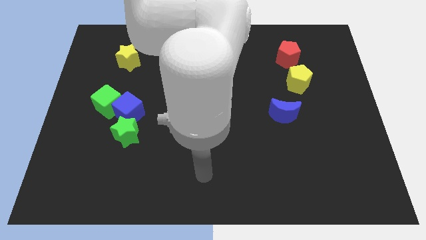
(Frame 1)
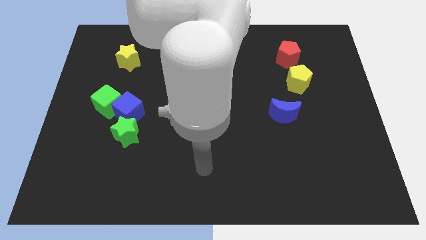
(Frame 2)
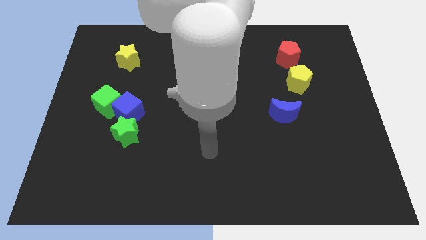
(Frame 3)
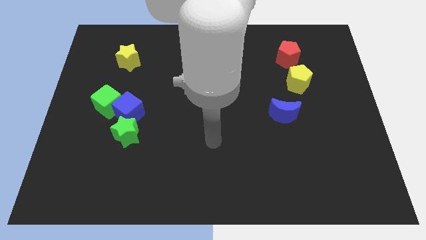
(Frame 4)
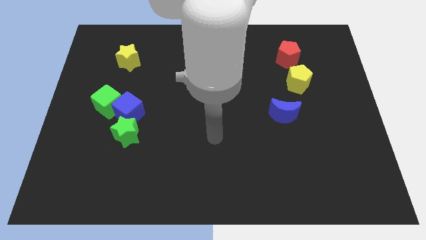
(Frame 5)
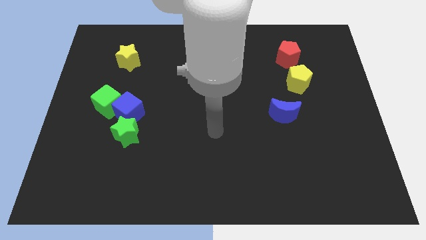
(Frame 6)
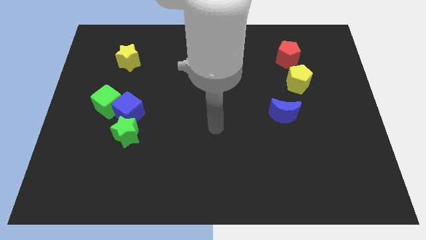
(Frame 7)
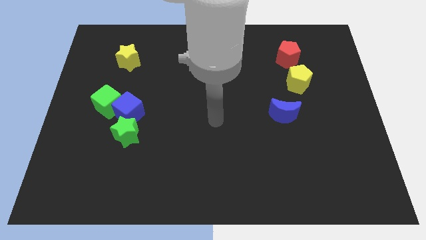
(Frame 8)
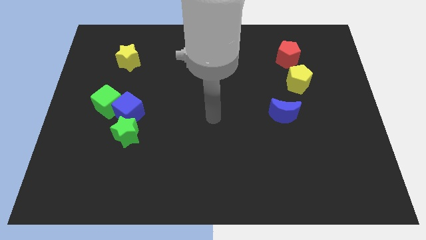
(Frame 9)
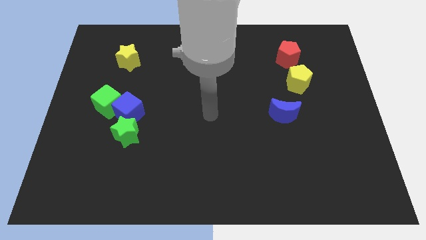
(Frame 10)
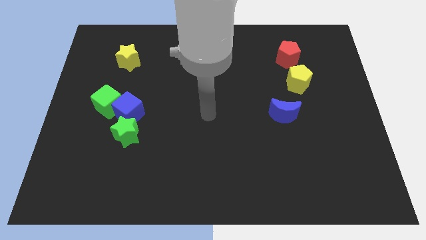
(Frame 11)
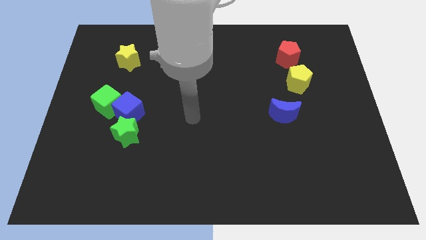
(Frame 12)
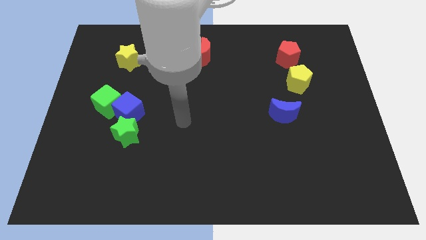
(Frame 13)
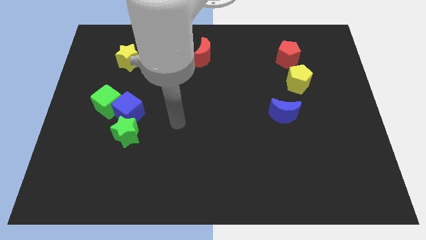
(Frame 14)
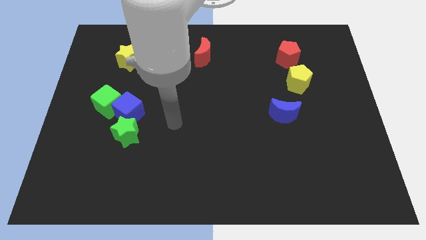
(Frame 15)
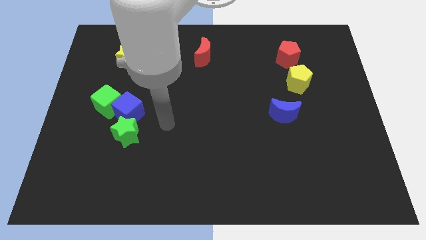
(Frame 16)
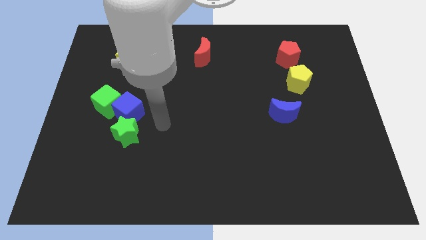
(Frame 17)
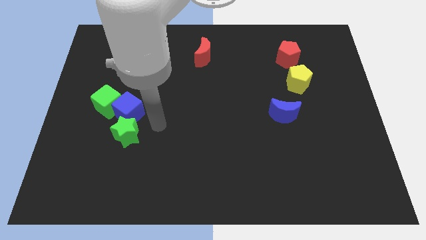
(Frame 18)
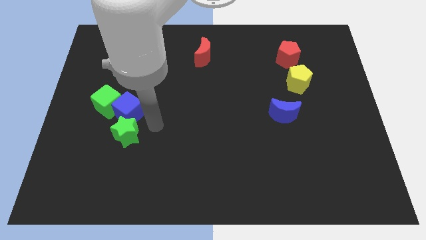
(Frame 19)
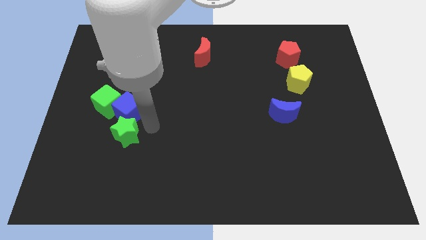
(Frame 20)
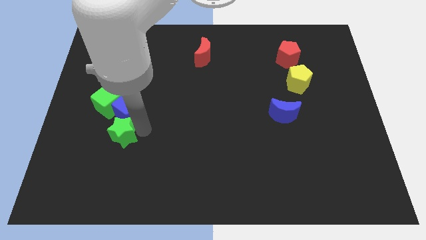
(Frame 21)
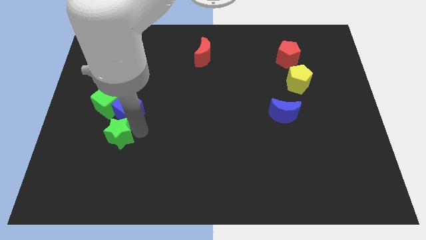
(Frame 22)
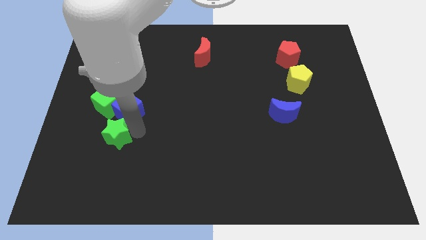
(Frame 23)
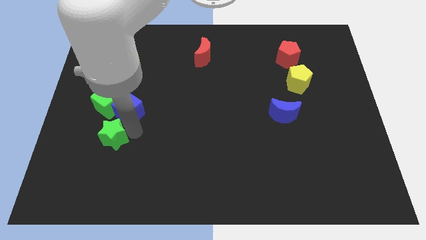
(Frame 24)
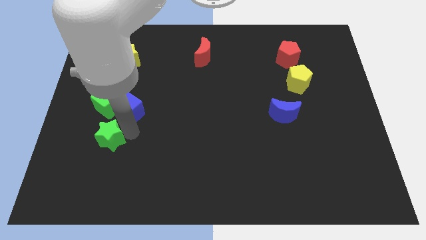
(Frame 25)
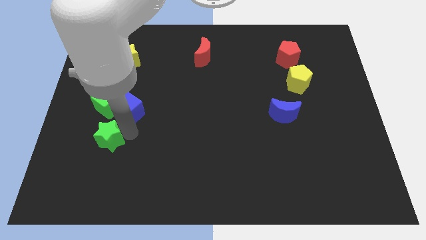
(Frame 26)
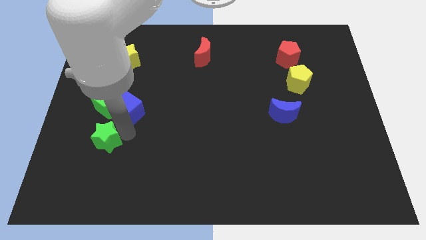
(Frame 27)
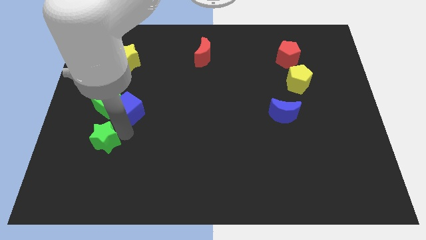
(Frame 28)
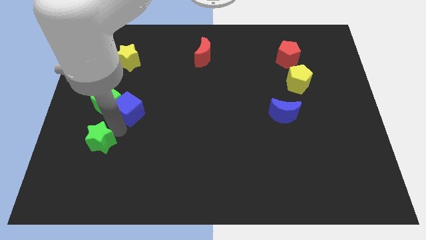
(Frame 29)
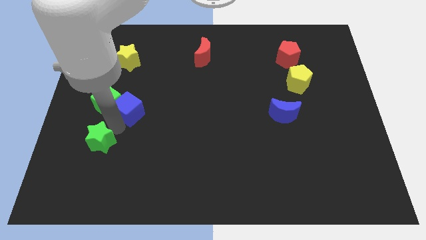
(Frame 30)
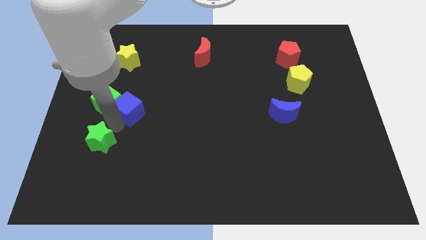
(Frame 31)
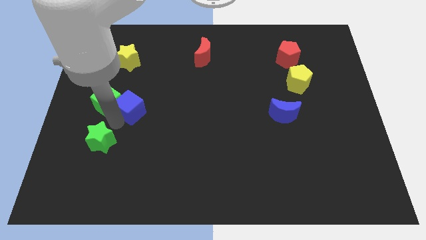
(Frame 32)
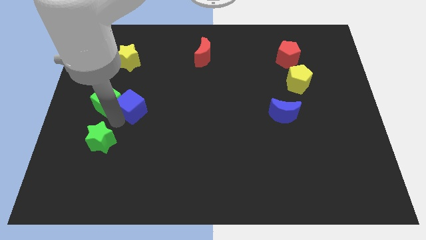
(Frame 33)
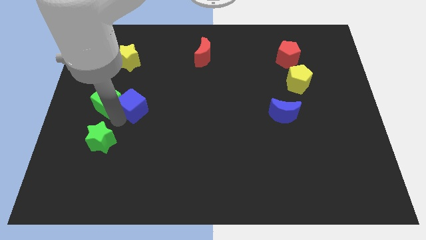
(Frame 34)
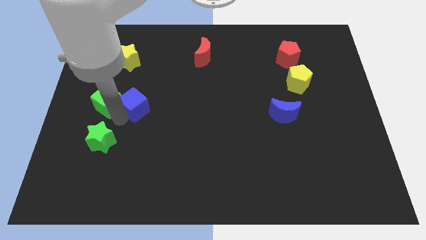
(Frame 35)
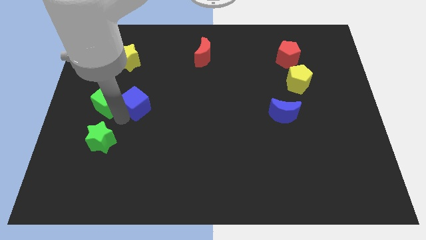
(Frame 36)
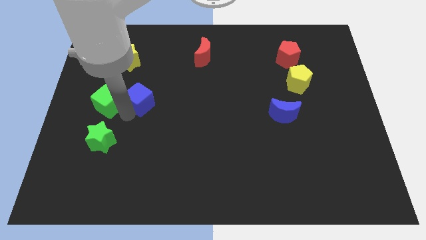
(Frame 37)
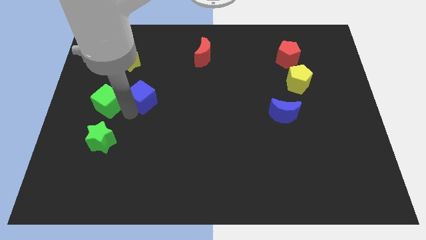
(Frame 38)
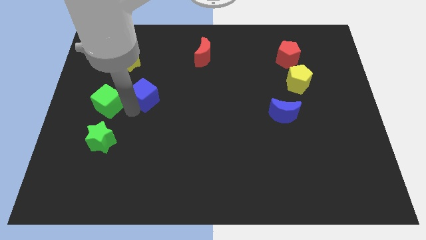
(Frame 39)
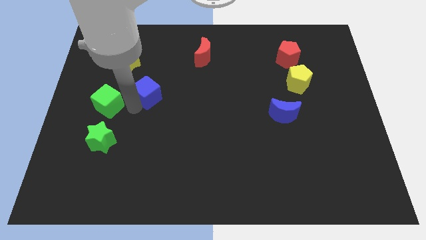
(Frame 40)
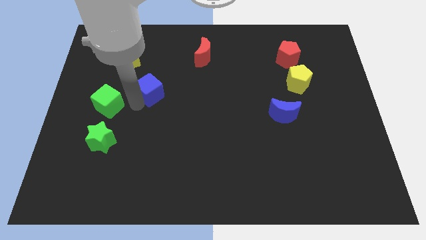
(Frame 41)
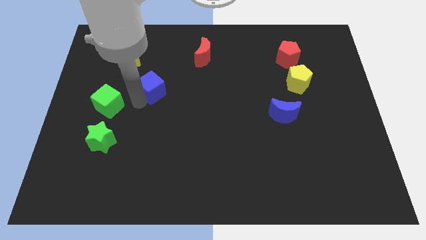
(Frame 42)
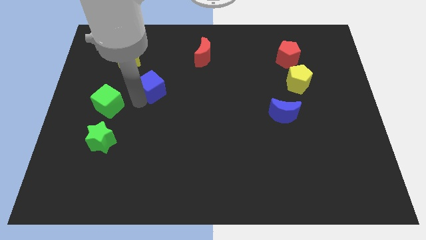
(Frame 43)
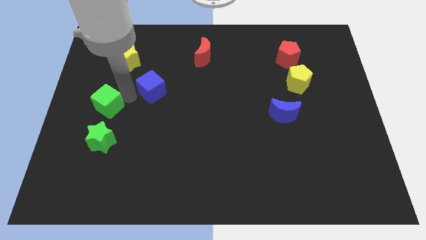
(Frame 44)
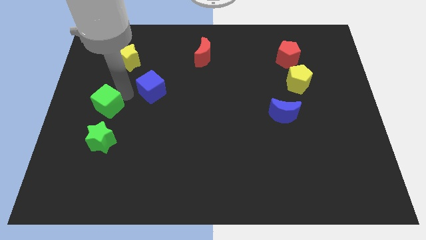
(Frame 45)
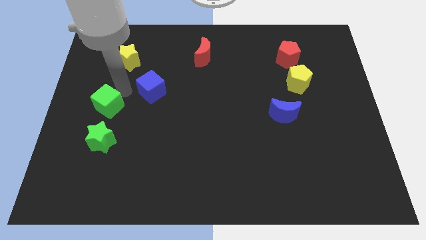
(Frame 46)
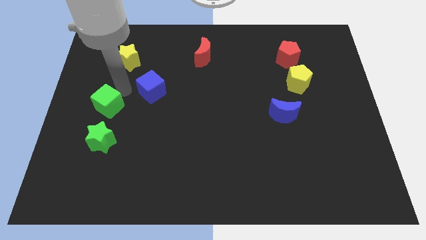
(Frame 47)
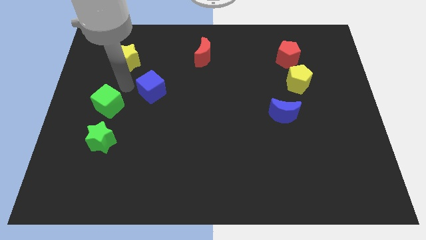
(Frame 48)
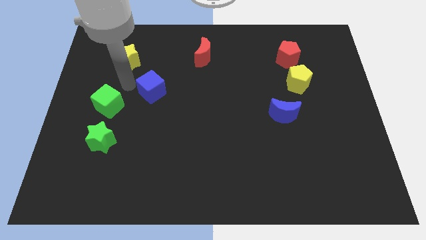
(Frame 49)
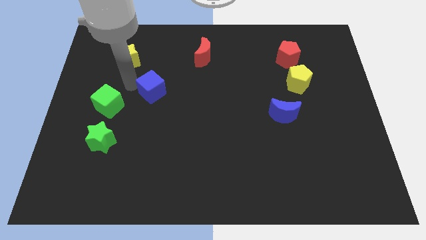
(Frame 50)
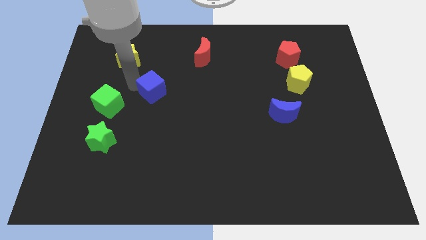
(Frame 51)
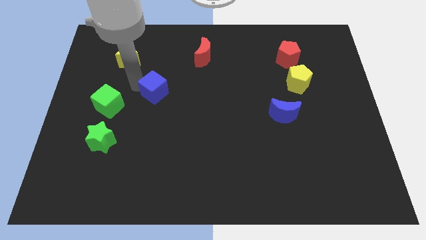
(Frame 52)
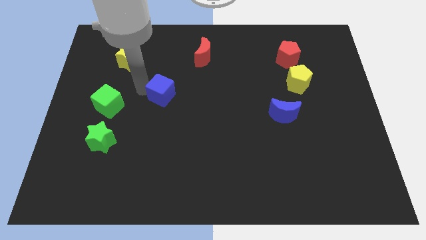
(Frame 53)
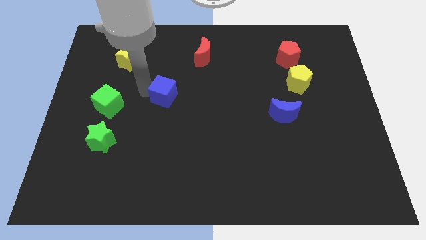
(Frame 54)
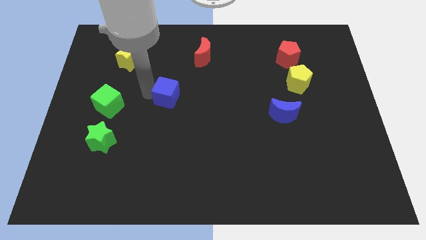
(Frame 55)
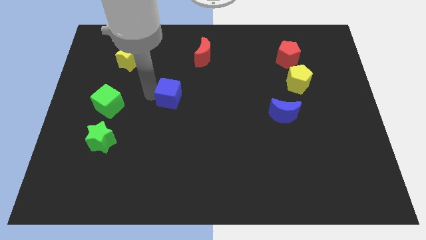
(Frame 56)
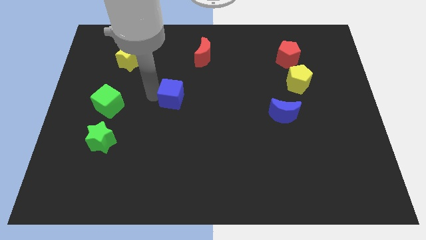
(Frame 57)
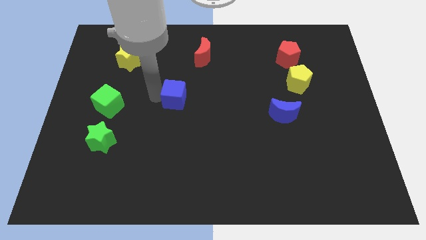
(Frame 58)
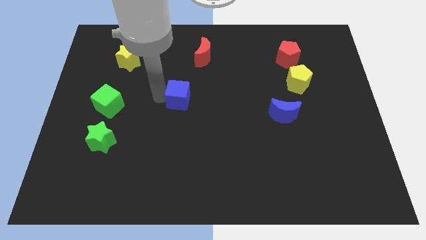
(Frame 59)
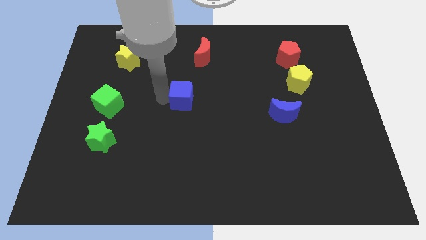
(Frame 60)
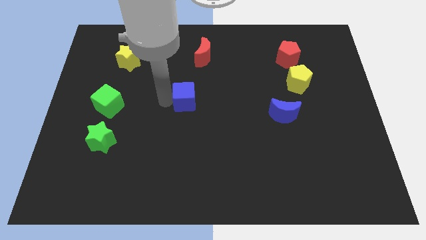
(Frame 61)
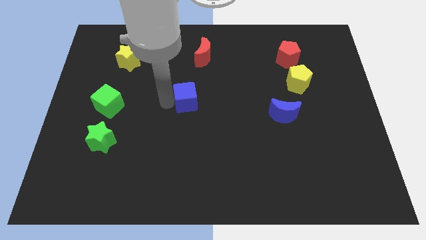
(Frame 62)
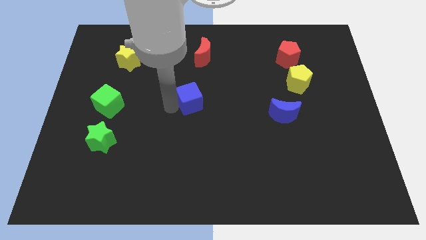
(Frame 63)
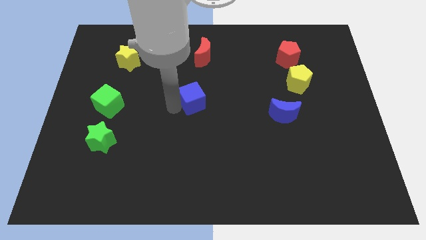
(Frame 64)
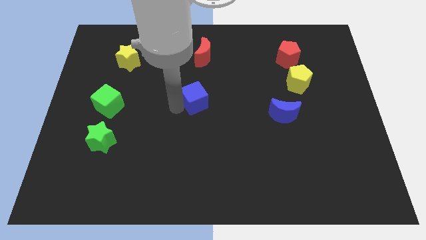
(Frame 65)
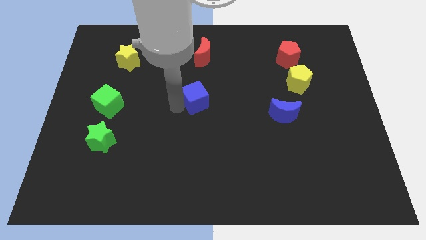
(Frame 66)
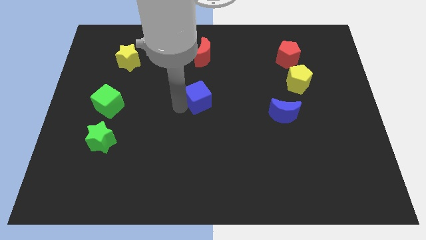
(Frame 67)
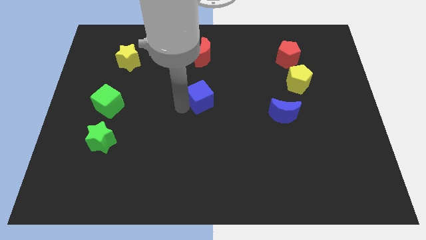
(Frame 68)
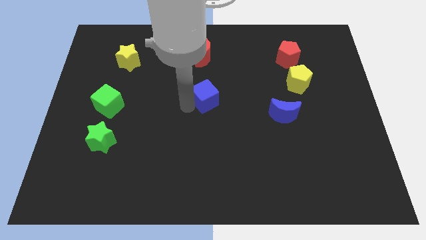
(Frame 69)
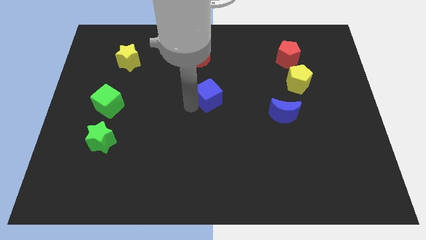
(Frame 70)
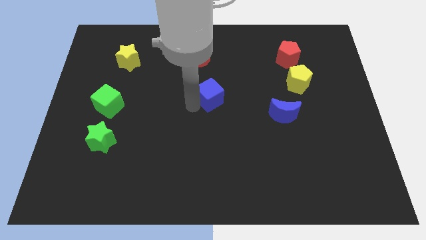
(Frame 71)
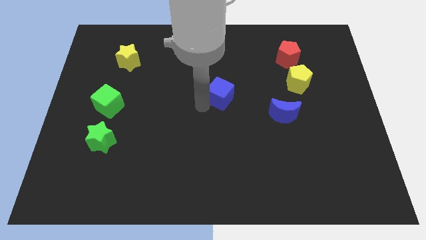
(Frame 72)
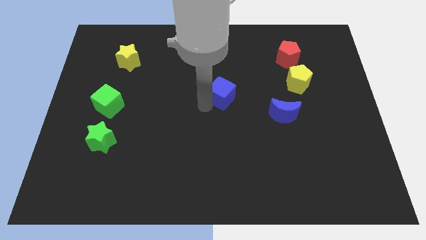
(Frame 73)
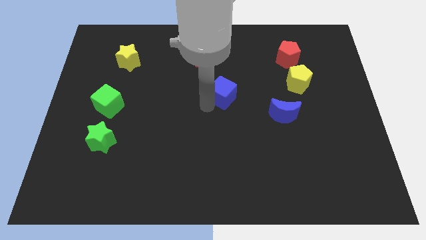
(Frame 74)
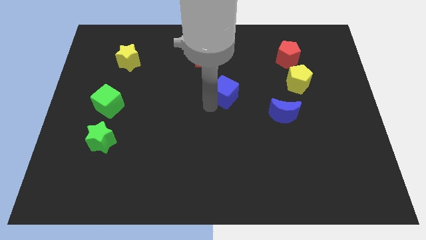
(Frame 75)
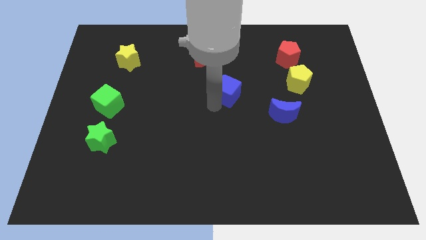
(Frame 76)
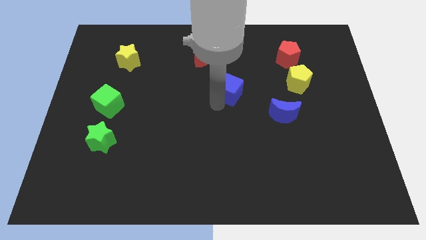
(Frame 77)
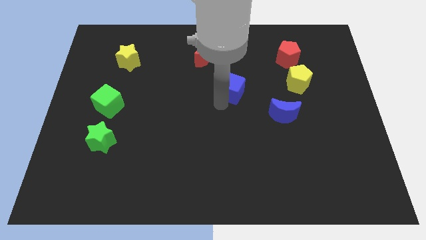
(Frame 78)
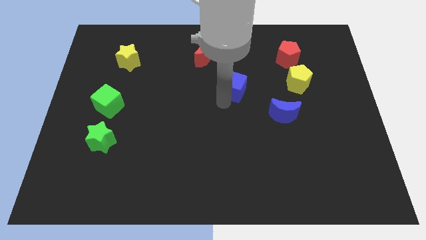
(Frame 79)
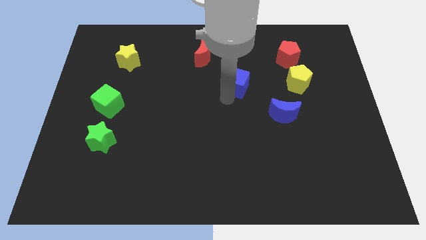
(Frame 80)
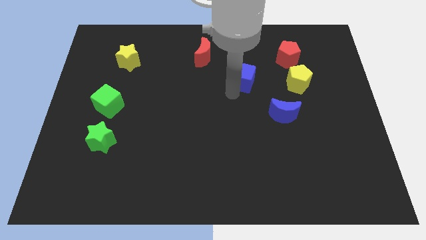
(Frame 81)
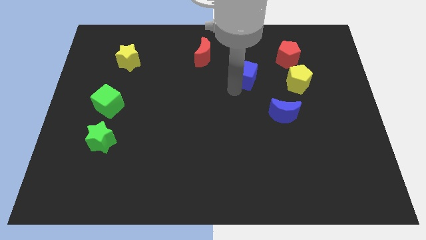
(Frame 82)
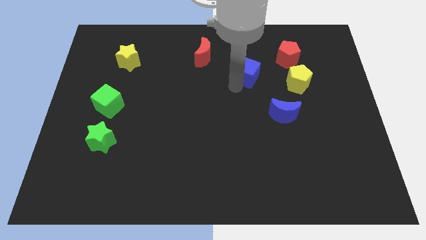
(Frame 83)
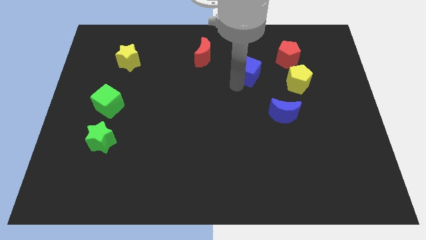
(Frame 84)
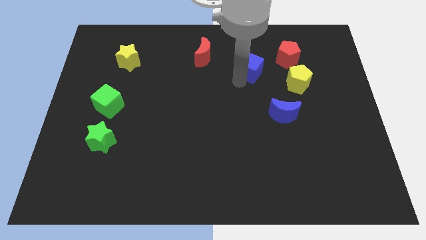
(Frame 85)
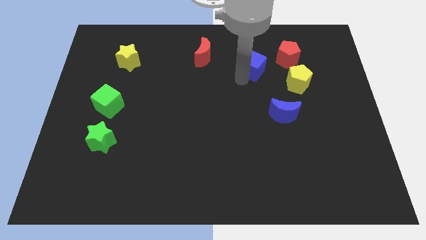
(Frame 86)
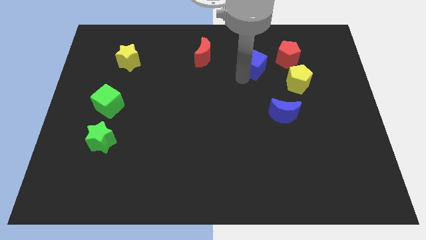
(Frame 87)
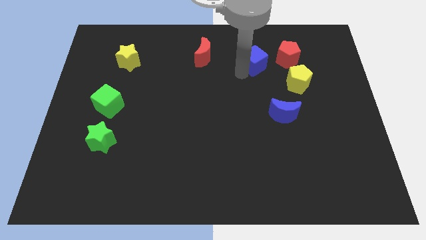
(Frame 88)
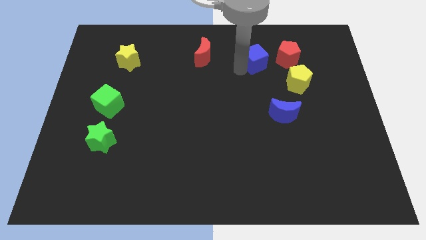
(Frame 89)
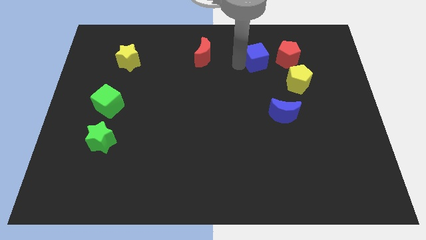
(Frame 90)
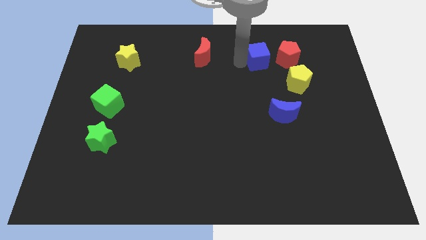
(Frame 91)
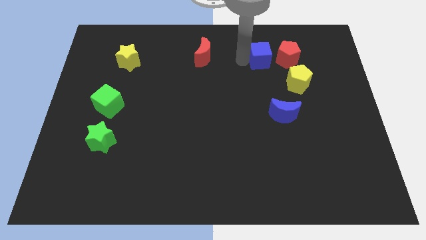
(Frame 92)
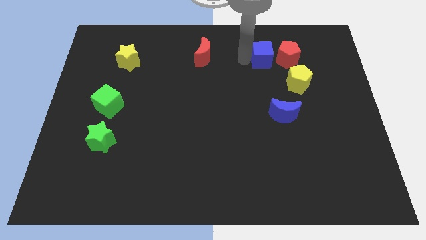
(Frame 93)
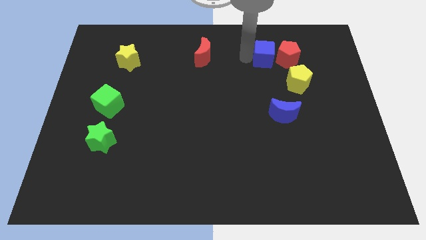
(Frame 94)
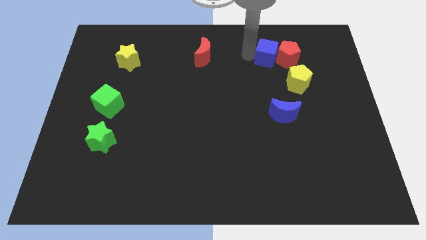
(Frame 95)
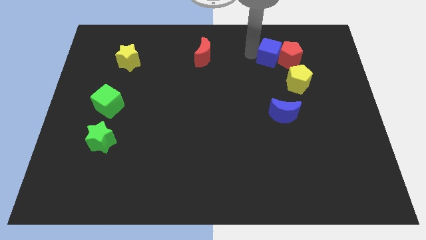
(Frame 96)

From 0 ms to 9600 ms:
slide the blue cube to the red pentagon
